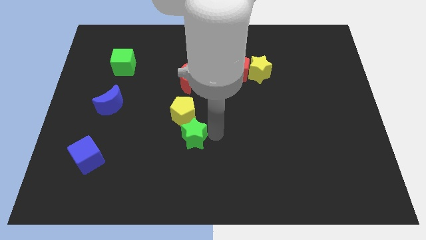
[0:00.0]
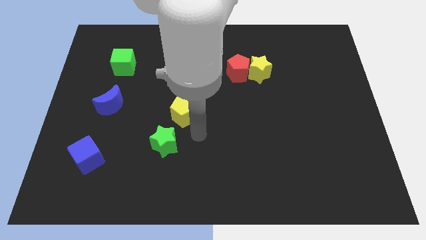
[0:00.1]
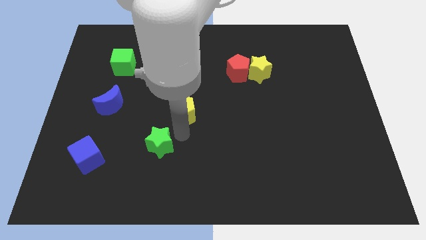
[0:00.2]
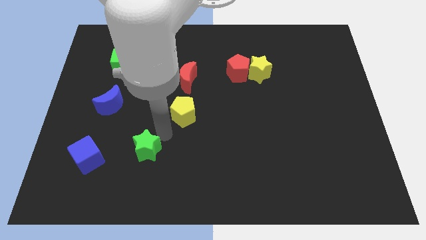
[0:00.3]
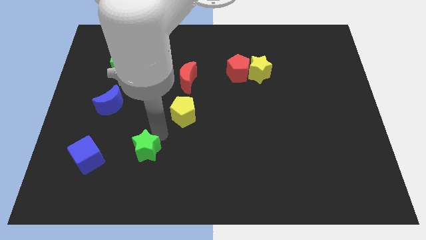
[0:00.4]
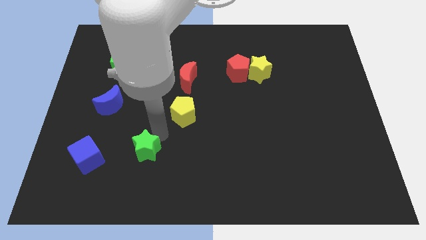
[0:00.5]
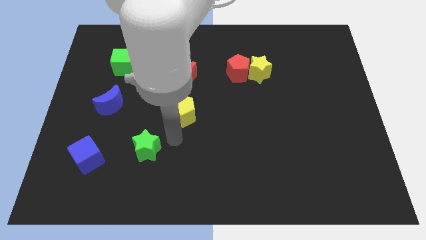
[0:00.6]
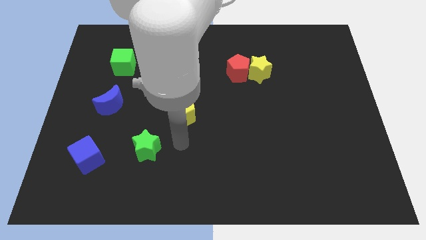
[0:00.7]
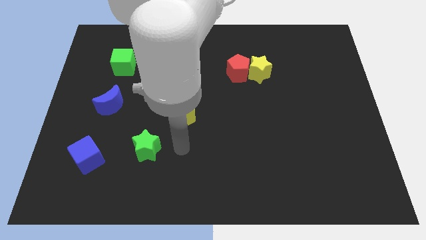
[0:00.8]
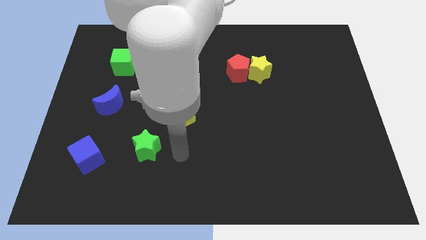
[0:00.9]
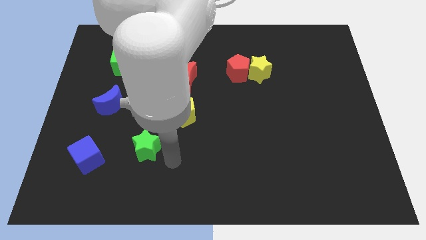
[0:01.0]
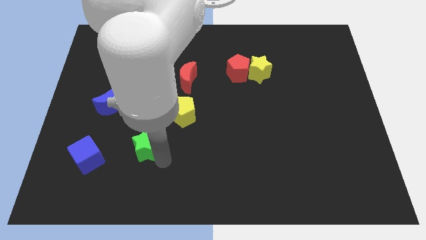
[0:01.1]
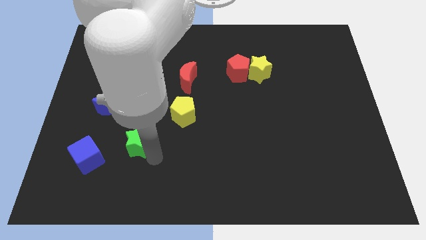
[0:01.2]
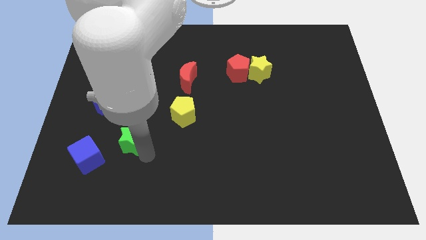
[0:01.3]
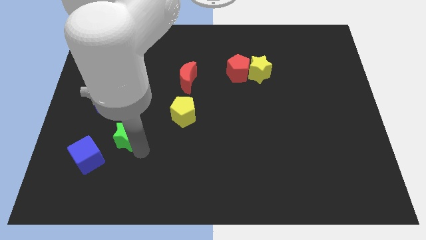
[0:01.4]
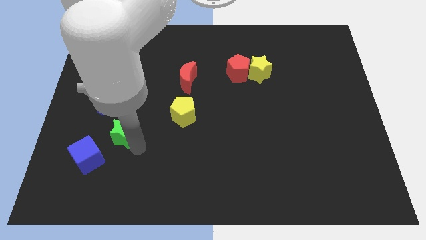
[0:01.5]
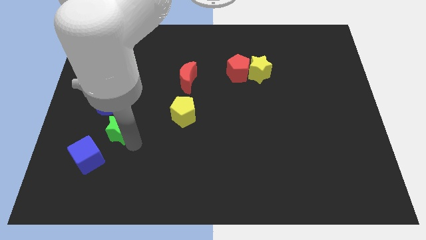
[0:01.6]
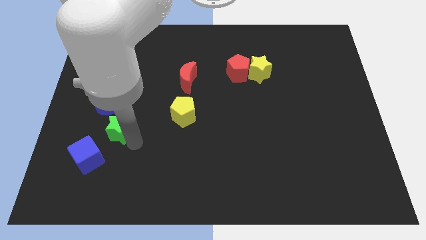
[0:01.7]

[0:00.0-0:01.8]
place green start above blue cube

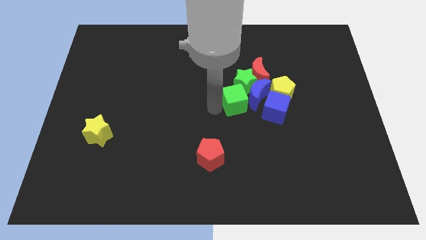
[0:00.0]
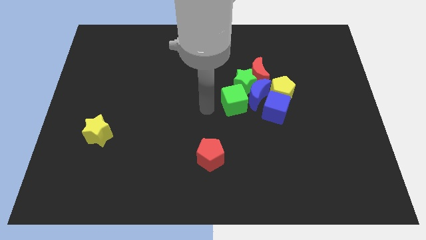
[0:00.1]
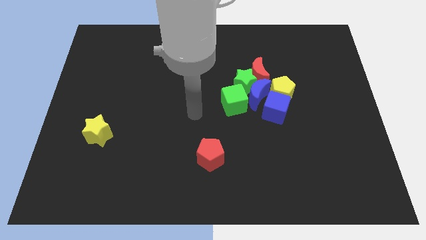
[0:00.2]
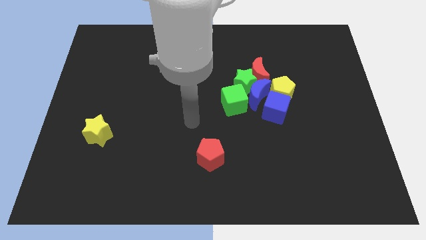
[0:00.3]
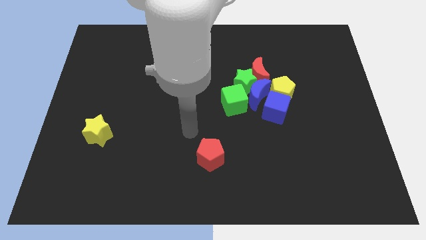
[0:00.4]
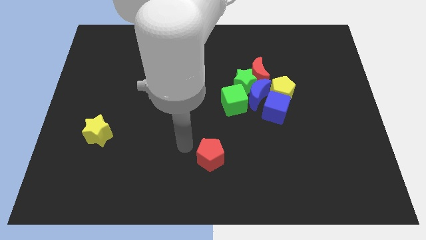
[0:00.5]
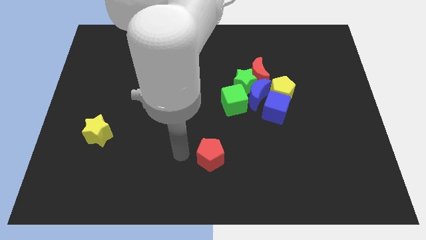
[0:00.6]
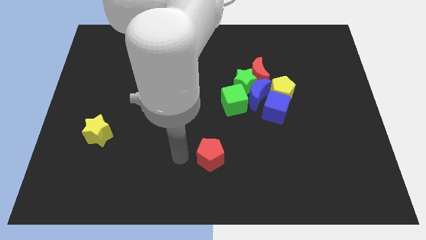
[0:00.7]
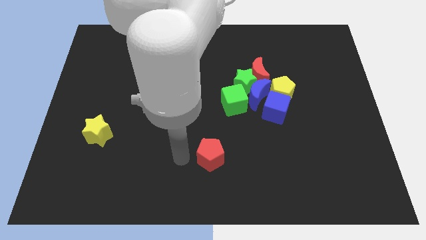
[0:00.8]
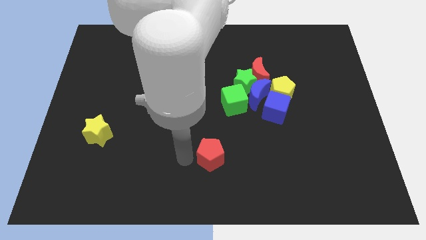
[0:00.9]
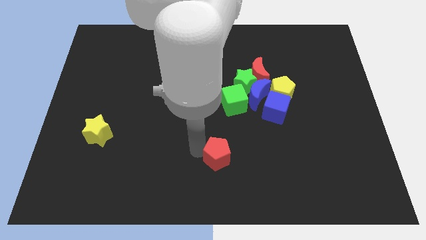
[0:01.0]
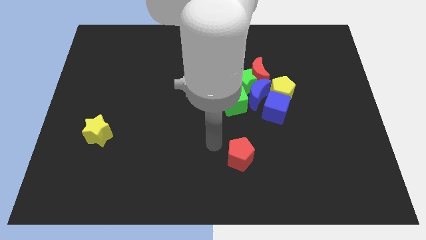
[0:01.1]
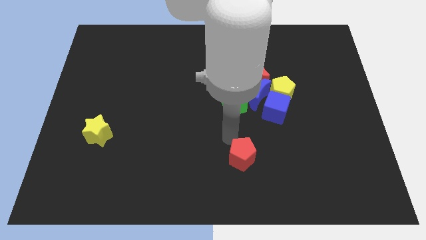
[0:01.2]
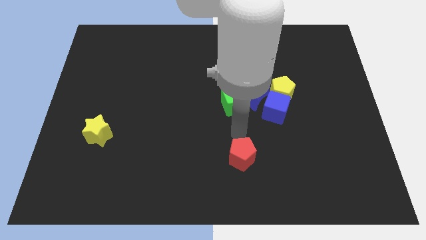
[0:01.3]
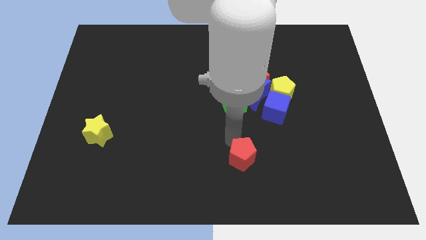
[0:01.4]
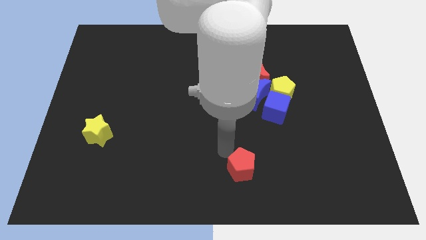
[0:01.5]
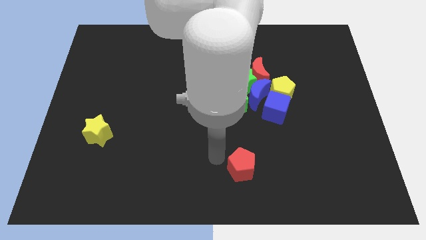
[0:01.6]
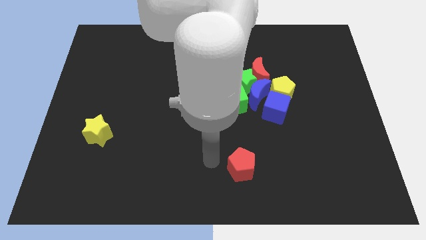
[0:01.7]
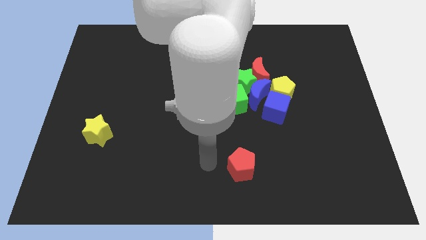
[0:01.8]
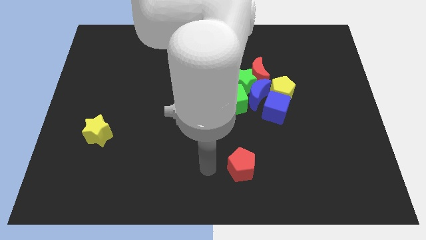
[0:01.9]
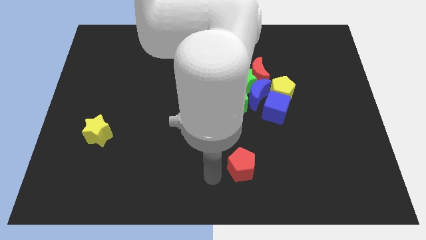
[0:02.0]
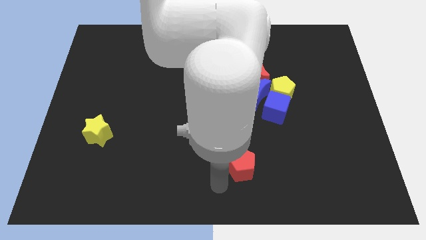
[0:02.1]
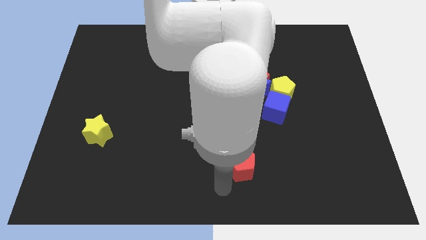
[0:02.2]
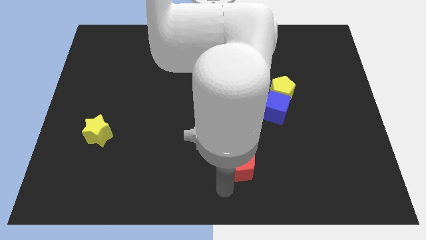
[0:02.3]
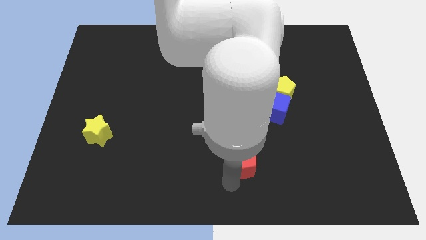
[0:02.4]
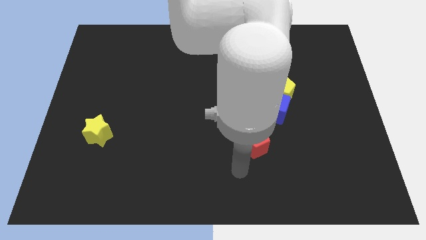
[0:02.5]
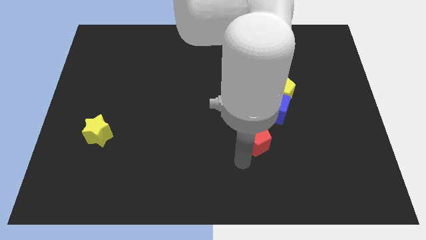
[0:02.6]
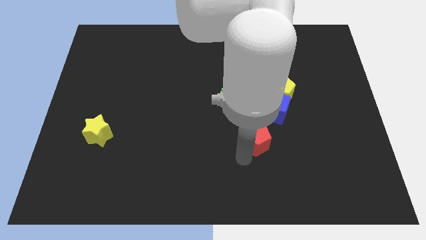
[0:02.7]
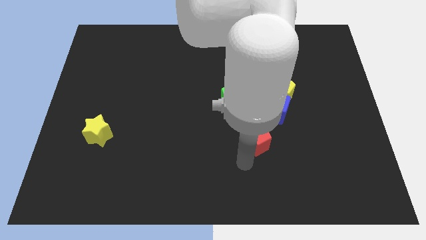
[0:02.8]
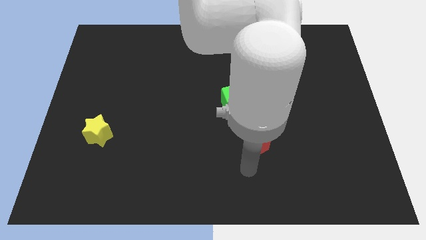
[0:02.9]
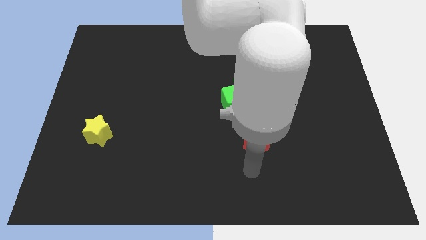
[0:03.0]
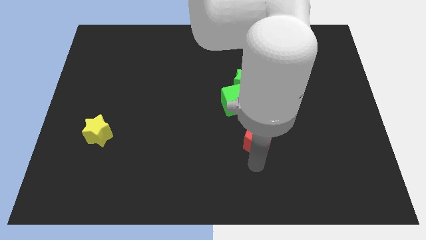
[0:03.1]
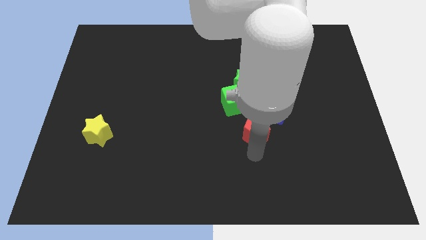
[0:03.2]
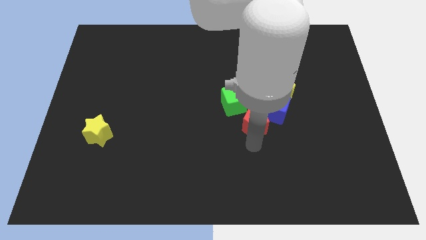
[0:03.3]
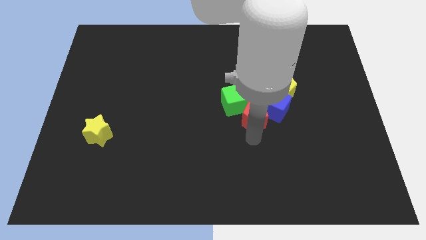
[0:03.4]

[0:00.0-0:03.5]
push the red pentagon towards the group of blocks

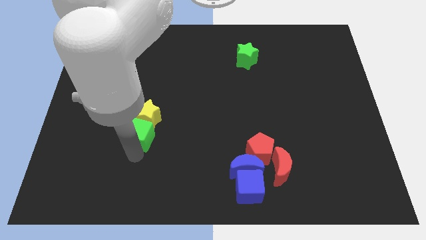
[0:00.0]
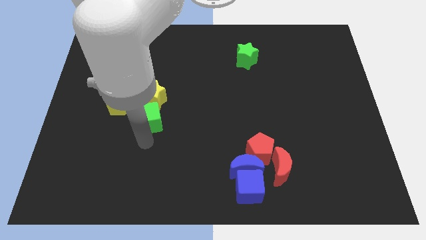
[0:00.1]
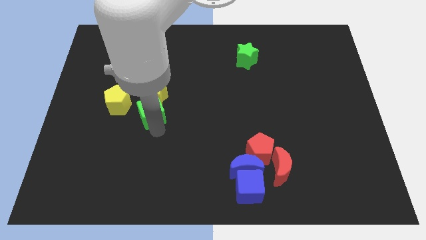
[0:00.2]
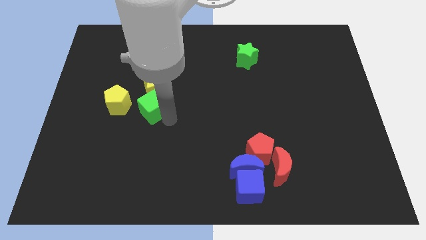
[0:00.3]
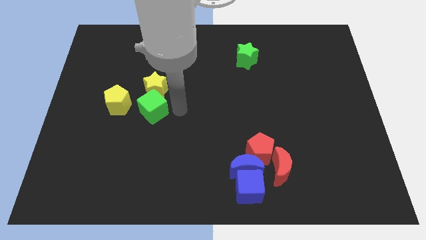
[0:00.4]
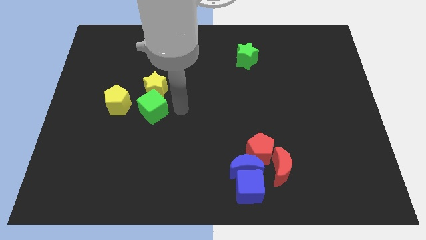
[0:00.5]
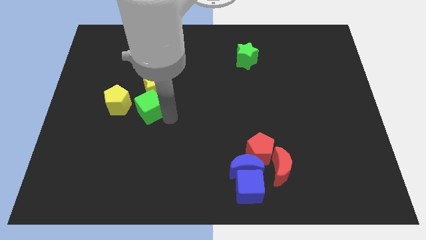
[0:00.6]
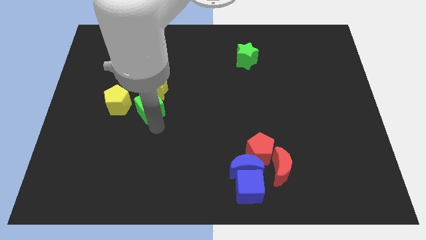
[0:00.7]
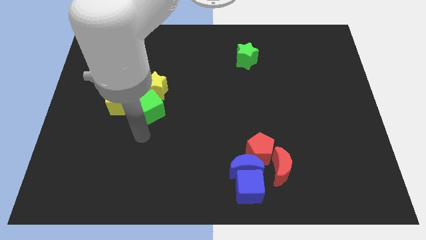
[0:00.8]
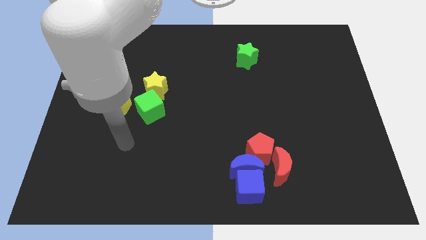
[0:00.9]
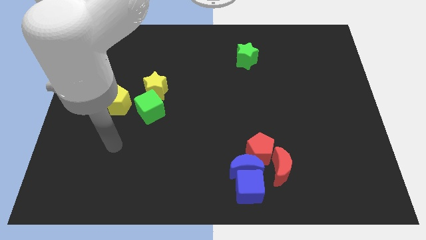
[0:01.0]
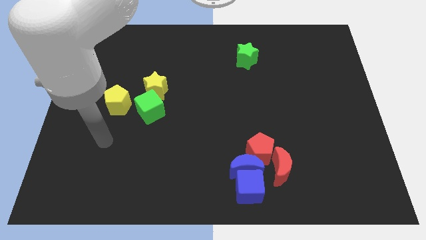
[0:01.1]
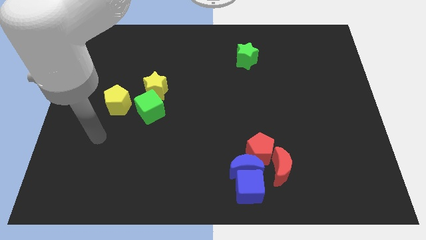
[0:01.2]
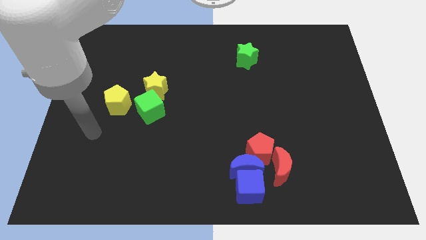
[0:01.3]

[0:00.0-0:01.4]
drag the green cube and yellow star to the right side of the yellow pentagon

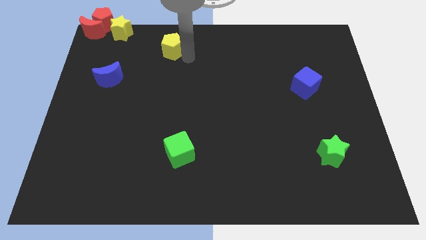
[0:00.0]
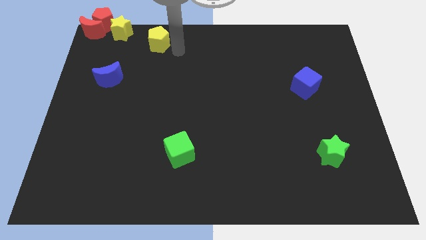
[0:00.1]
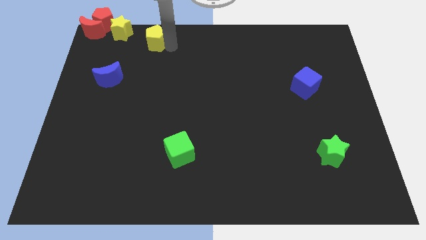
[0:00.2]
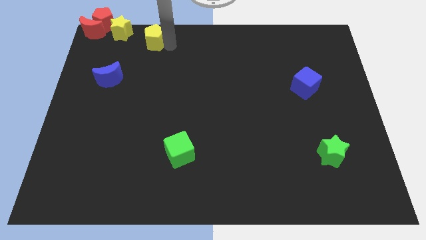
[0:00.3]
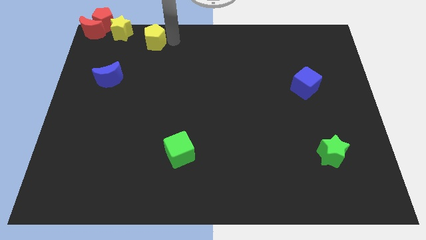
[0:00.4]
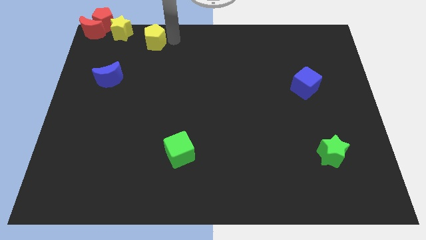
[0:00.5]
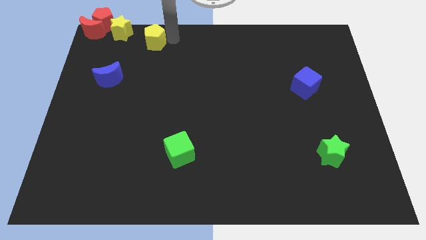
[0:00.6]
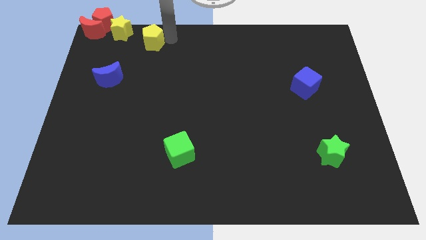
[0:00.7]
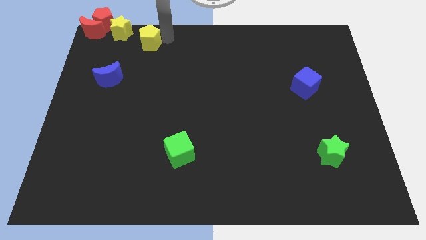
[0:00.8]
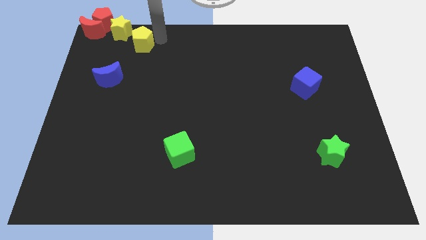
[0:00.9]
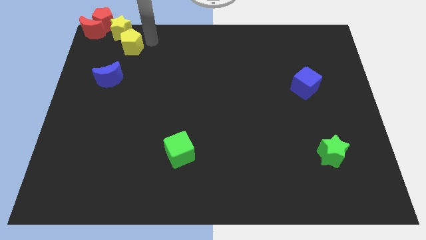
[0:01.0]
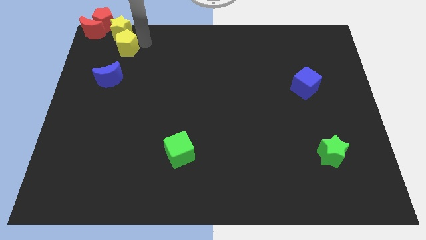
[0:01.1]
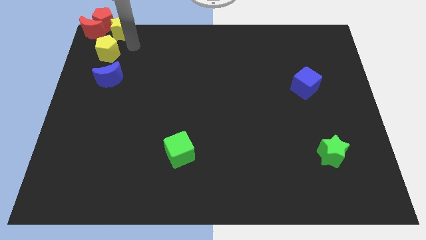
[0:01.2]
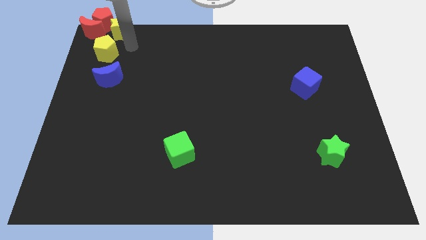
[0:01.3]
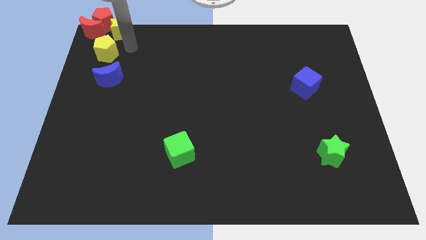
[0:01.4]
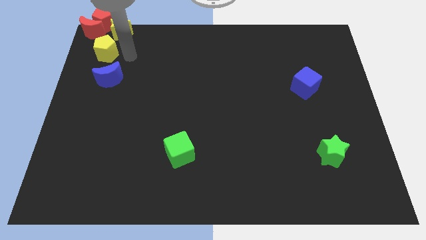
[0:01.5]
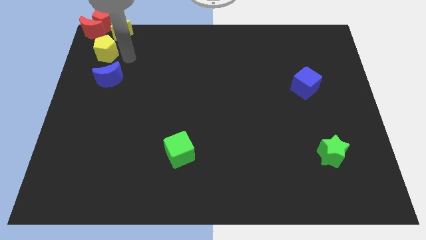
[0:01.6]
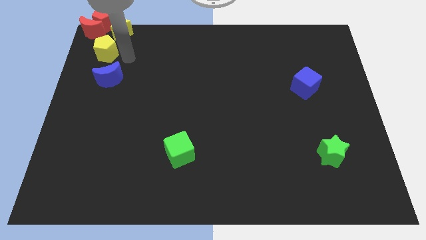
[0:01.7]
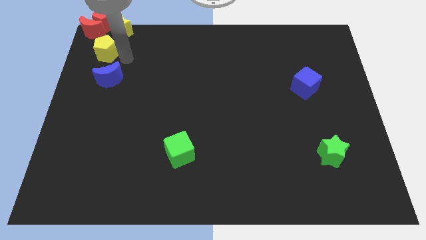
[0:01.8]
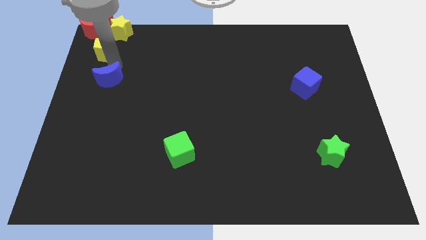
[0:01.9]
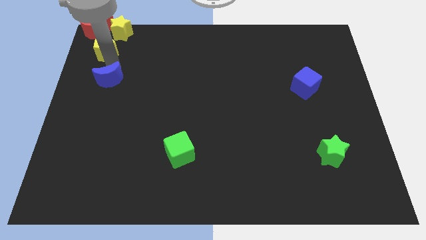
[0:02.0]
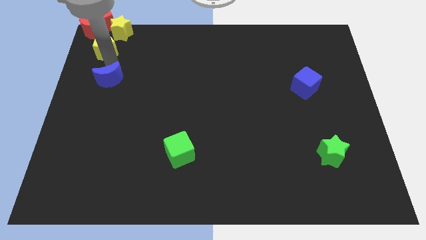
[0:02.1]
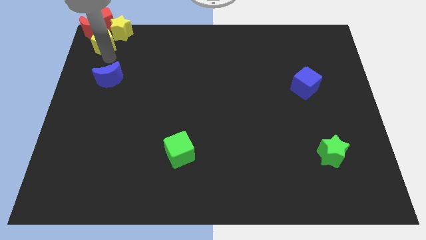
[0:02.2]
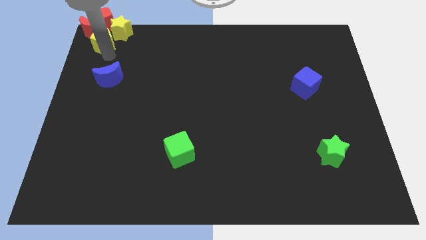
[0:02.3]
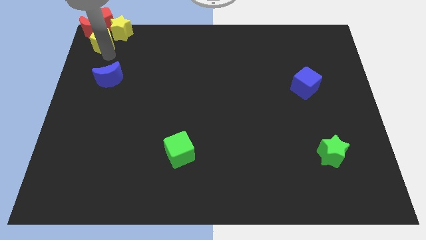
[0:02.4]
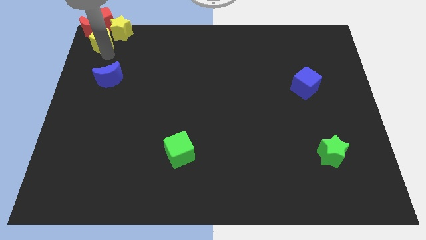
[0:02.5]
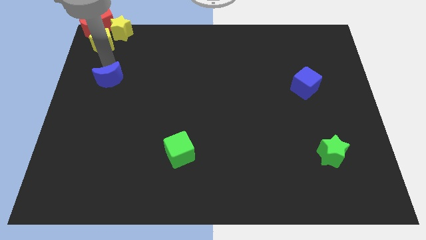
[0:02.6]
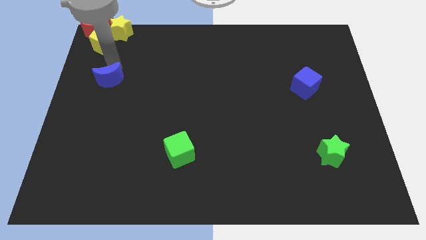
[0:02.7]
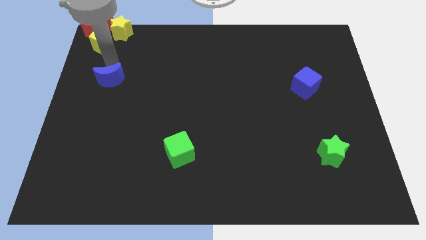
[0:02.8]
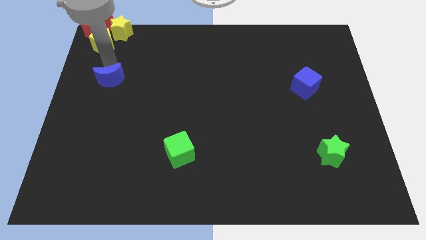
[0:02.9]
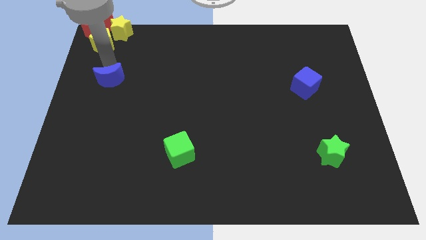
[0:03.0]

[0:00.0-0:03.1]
push the yellow pentagon into the red crescent
